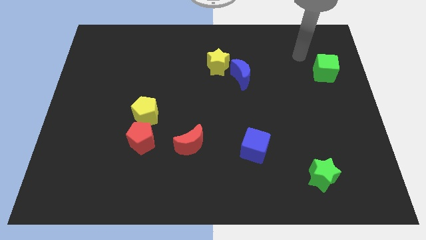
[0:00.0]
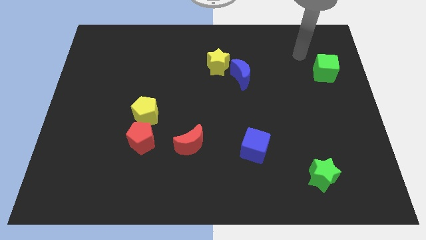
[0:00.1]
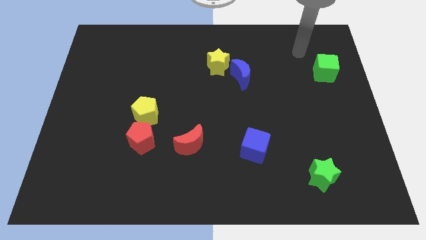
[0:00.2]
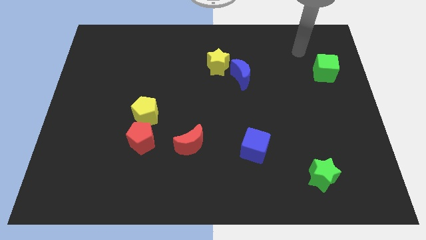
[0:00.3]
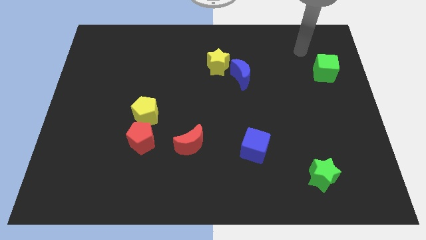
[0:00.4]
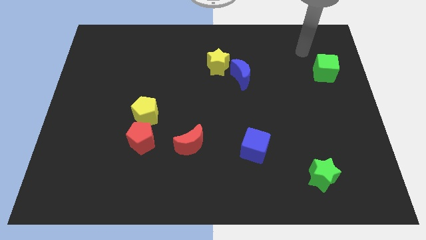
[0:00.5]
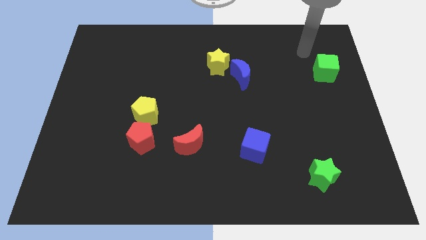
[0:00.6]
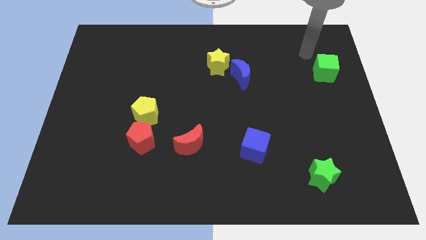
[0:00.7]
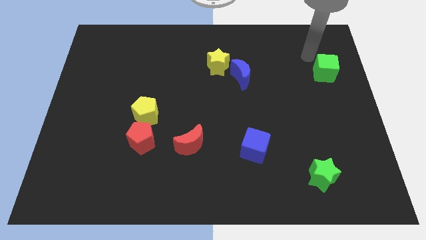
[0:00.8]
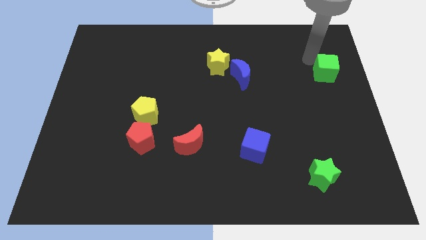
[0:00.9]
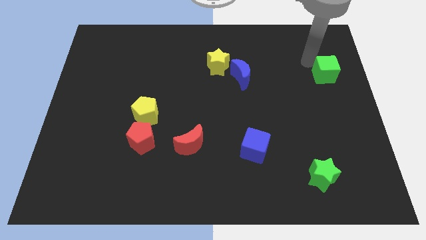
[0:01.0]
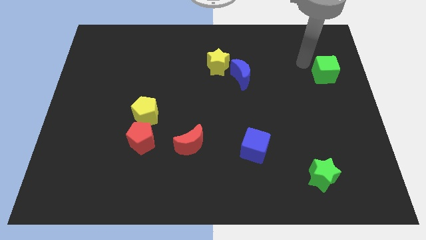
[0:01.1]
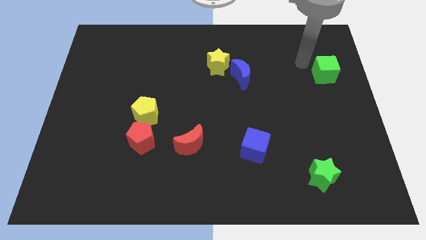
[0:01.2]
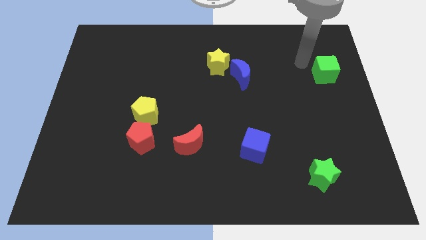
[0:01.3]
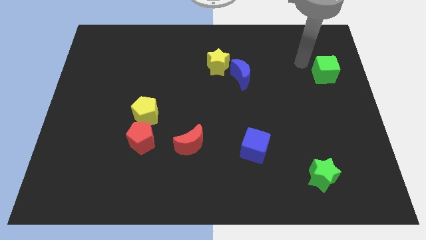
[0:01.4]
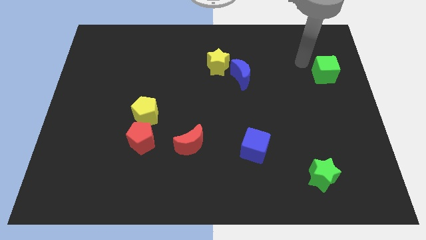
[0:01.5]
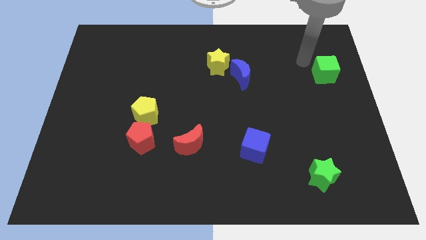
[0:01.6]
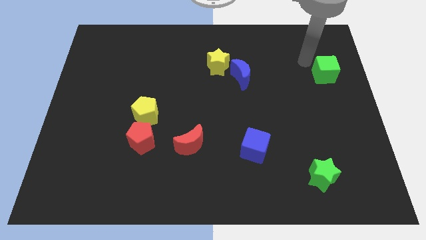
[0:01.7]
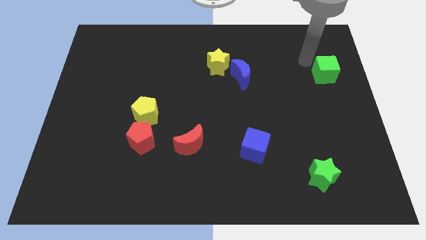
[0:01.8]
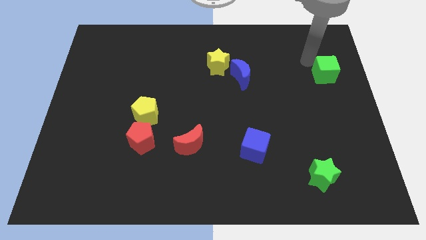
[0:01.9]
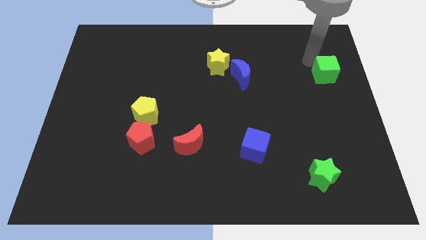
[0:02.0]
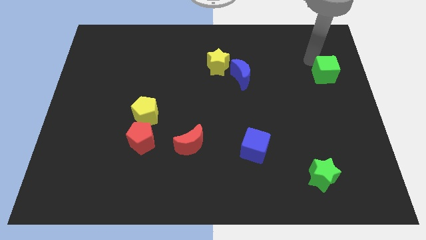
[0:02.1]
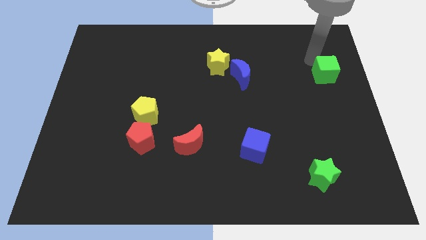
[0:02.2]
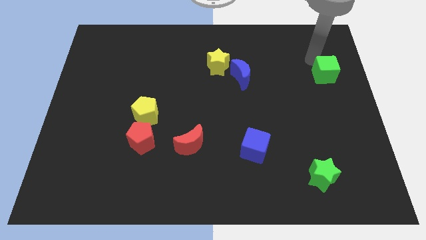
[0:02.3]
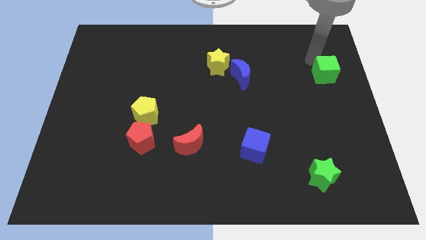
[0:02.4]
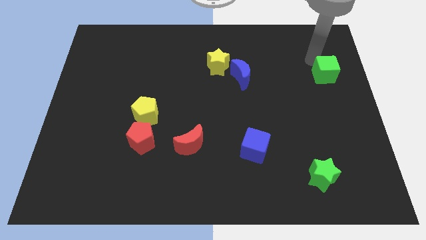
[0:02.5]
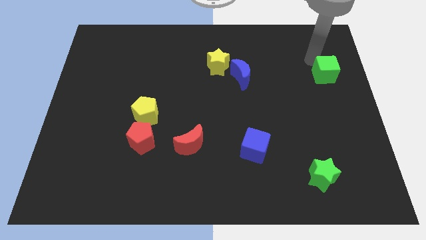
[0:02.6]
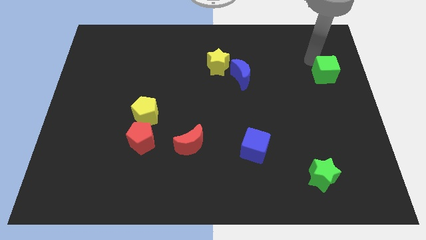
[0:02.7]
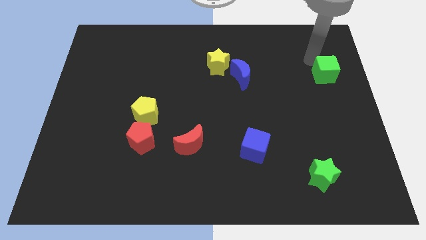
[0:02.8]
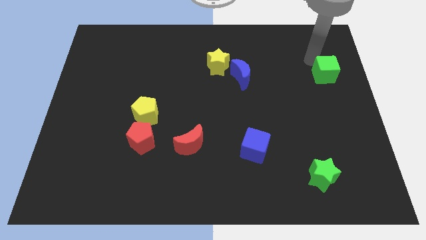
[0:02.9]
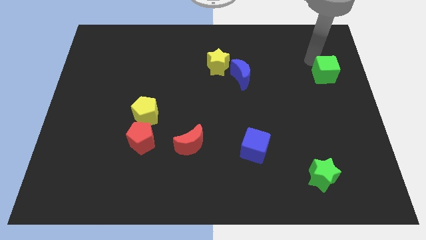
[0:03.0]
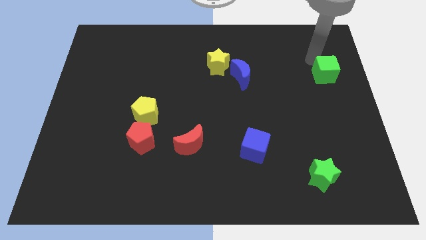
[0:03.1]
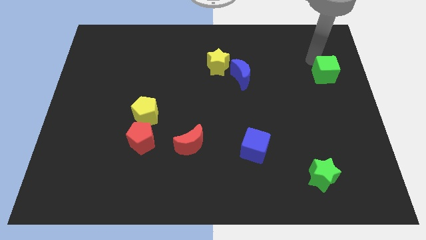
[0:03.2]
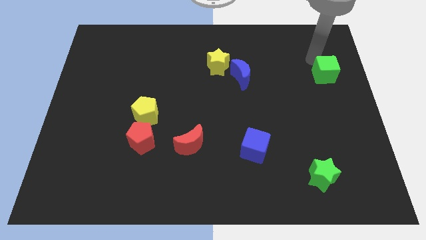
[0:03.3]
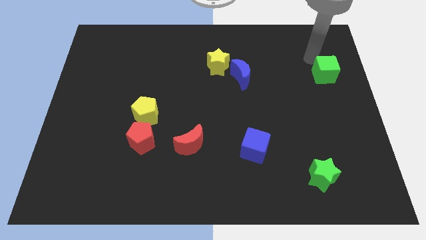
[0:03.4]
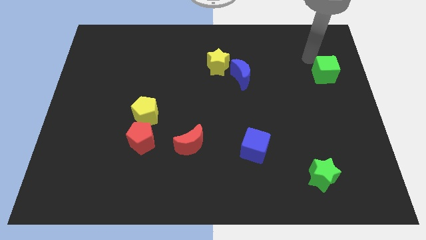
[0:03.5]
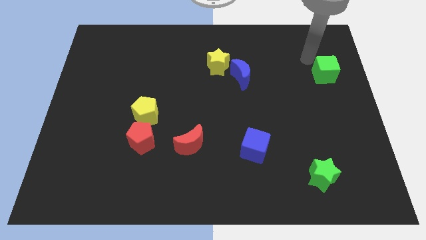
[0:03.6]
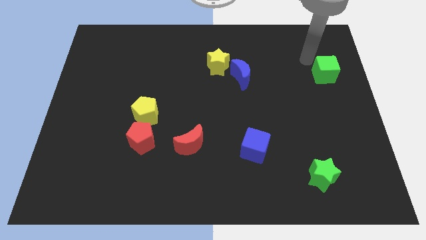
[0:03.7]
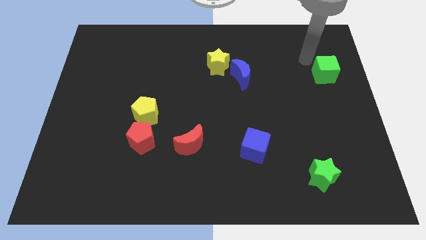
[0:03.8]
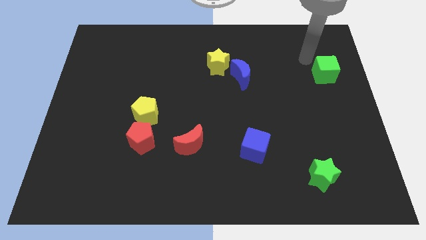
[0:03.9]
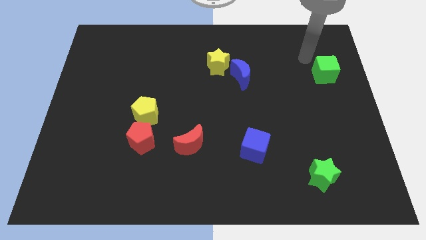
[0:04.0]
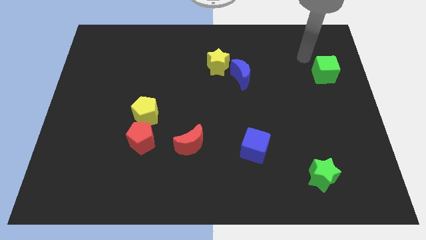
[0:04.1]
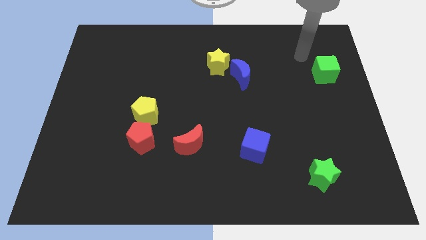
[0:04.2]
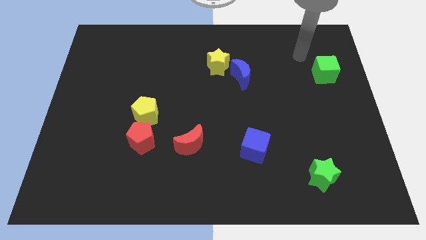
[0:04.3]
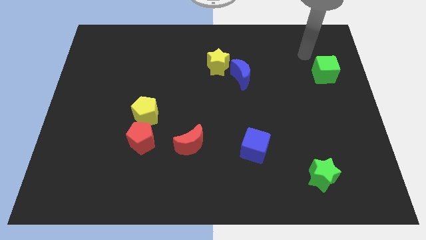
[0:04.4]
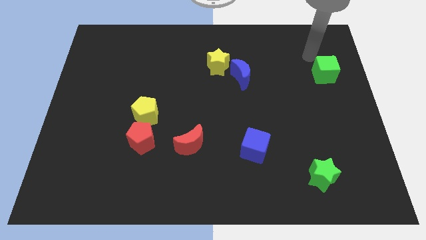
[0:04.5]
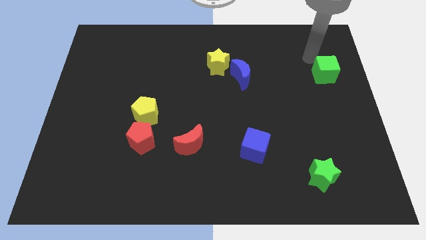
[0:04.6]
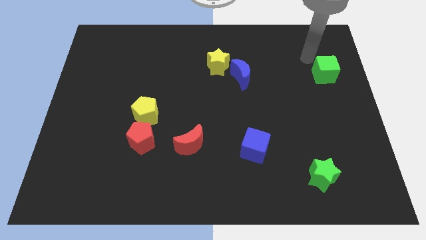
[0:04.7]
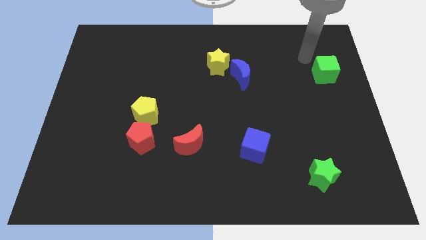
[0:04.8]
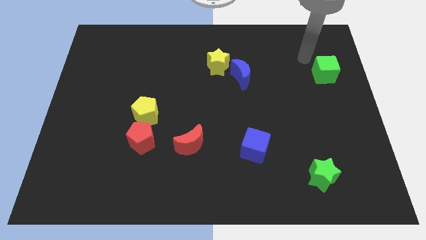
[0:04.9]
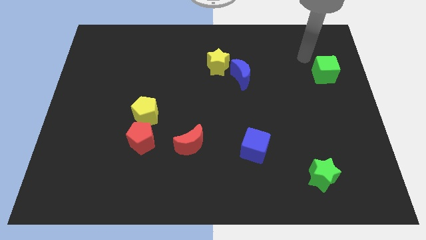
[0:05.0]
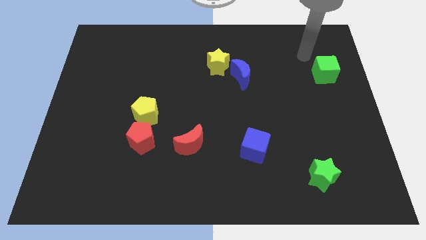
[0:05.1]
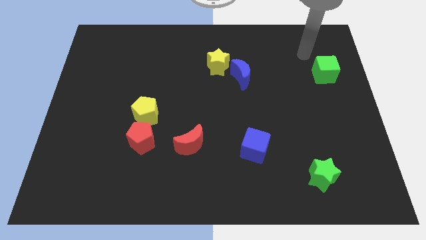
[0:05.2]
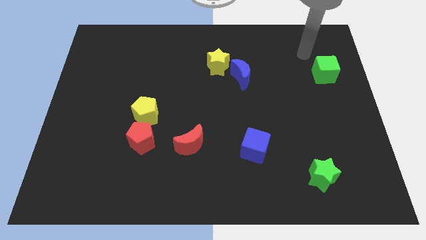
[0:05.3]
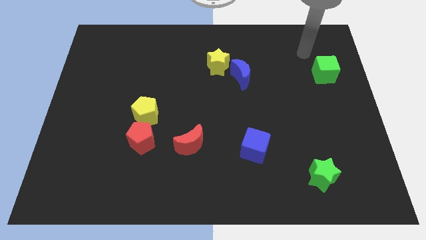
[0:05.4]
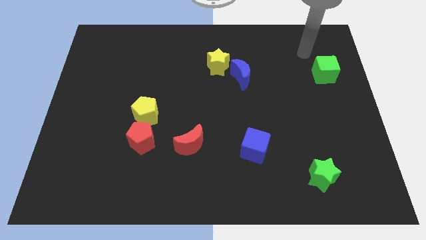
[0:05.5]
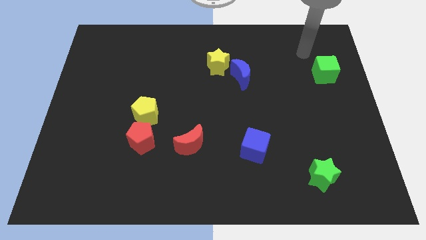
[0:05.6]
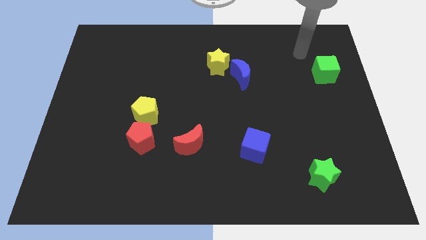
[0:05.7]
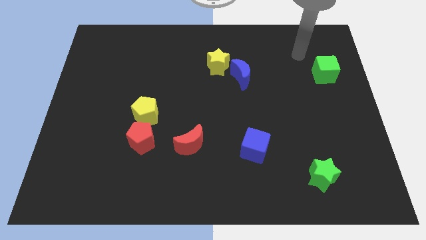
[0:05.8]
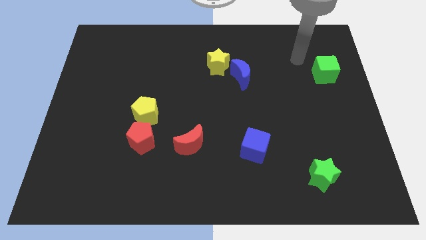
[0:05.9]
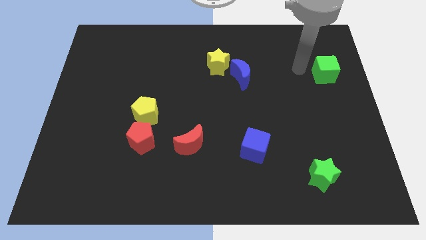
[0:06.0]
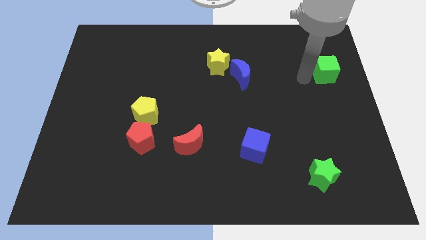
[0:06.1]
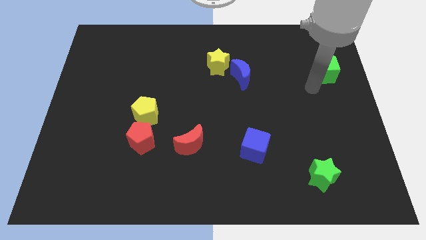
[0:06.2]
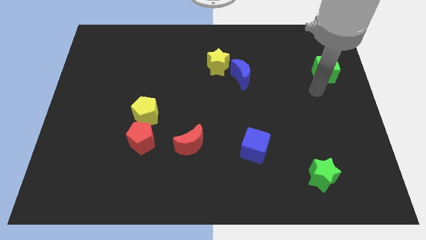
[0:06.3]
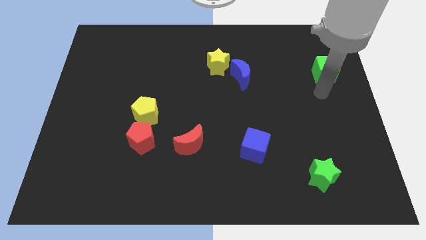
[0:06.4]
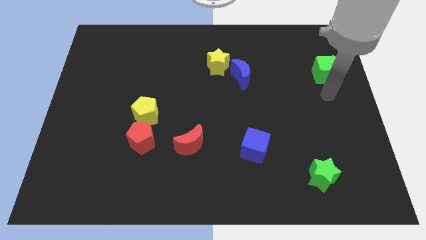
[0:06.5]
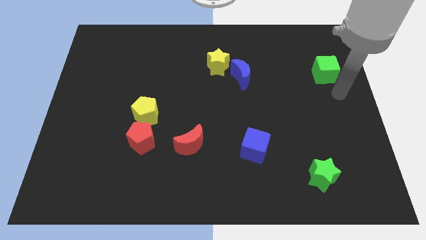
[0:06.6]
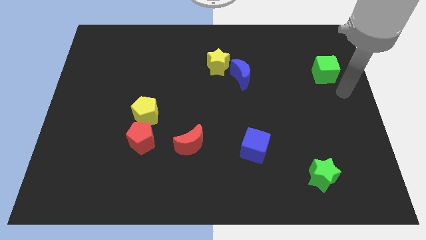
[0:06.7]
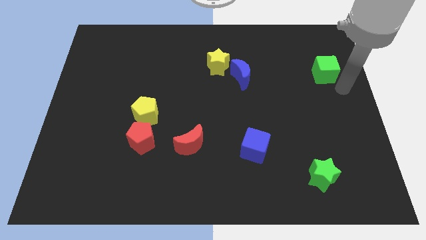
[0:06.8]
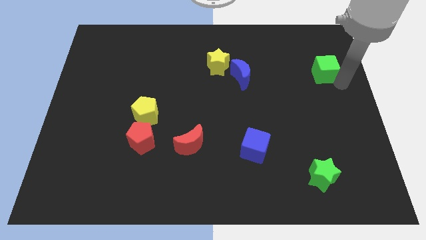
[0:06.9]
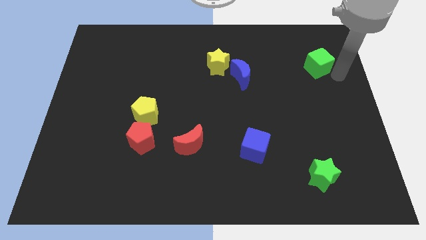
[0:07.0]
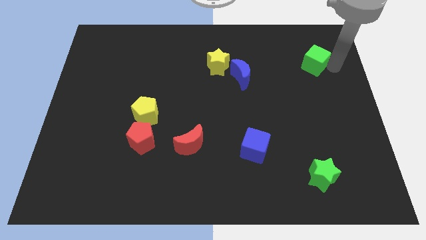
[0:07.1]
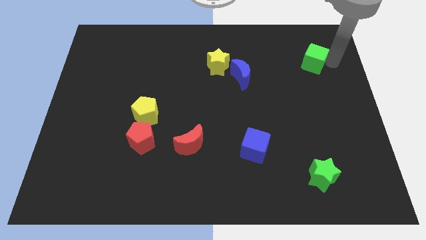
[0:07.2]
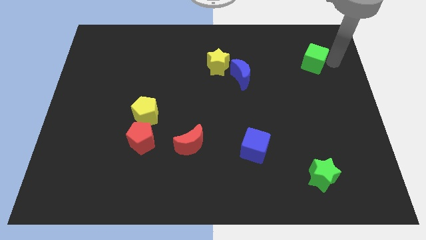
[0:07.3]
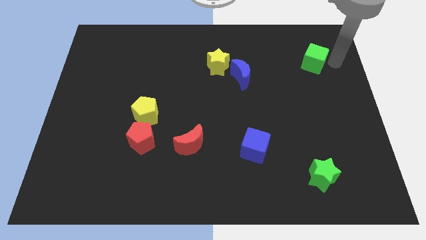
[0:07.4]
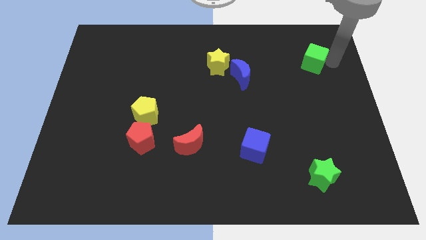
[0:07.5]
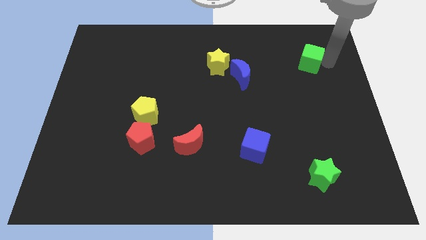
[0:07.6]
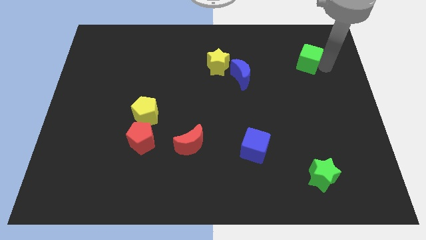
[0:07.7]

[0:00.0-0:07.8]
adjust the green cube diagonally to the top right of the blue moon

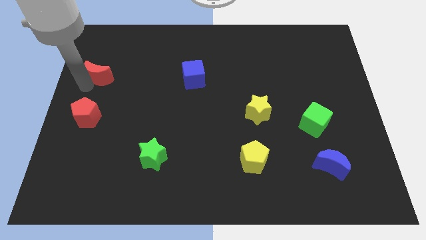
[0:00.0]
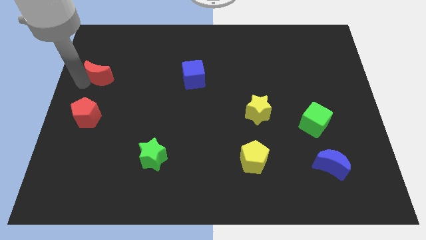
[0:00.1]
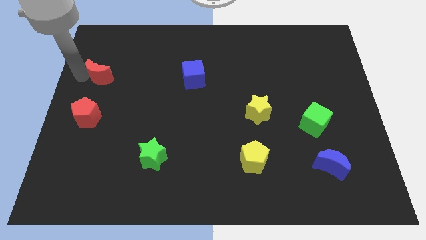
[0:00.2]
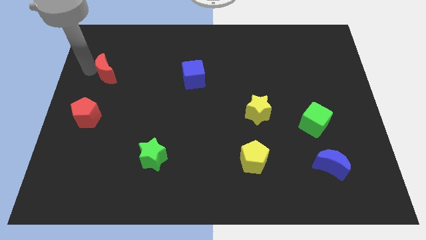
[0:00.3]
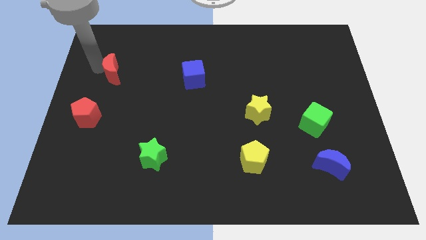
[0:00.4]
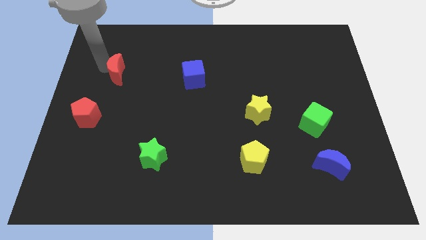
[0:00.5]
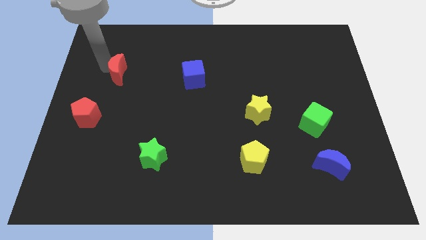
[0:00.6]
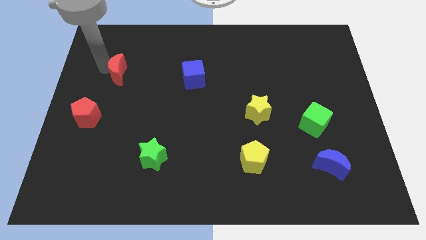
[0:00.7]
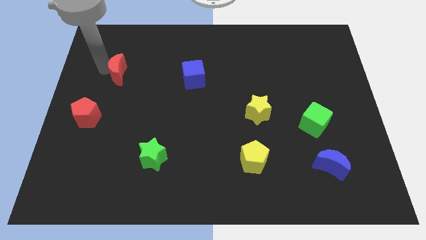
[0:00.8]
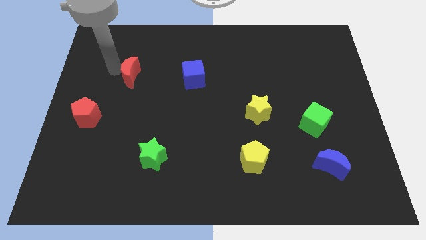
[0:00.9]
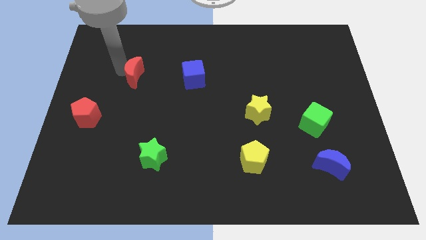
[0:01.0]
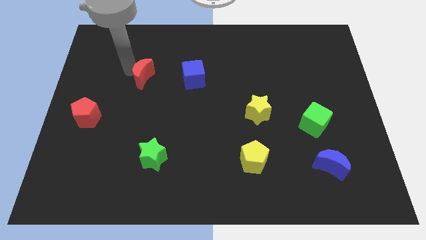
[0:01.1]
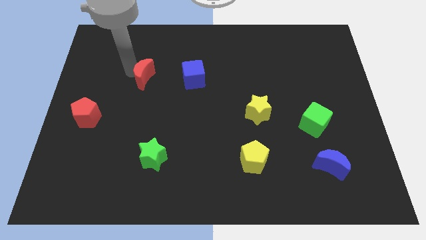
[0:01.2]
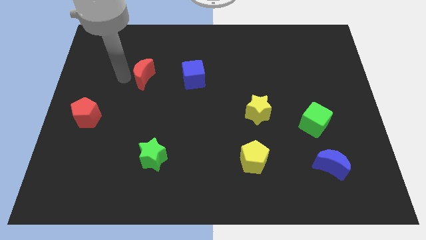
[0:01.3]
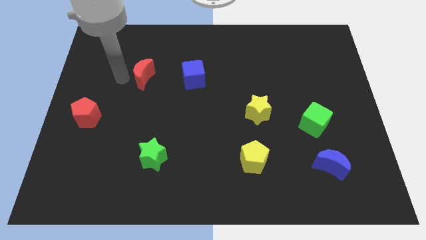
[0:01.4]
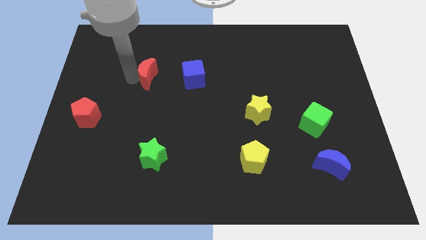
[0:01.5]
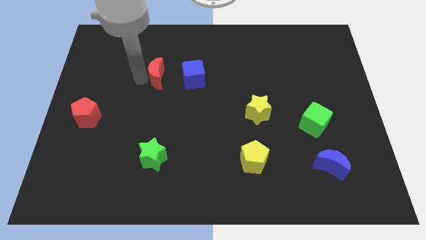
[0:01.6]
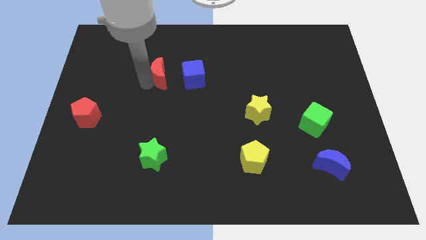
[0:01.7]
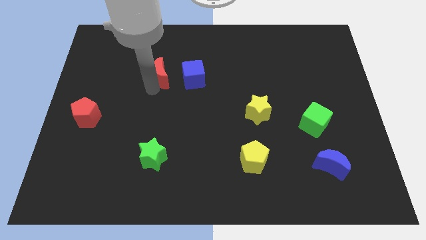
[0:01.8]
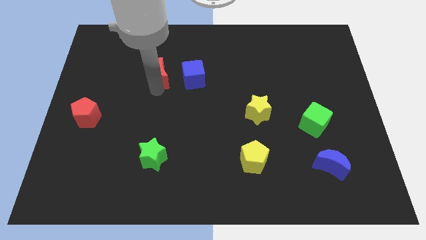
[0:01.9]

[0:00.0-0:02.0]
place red pentagon to the left of the blue cube
